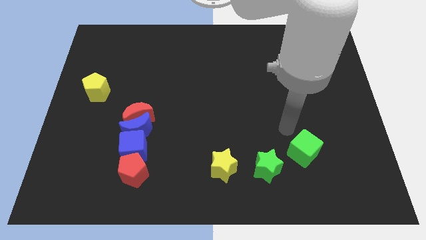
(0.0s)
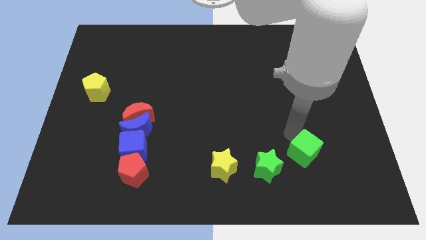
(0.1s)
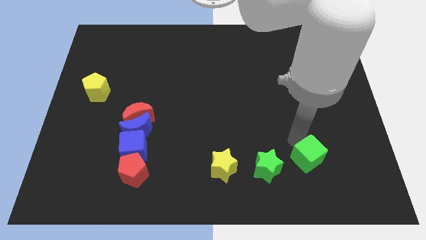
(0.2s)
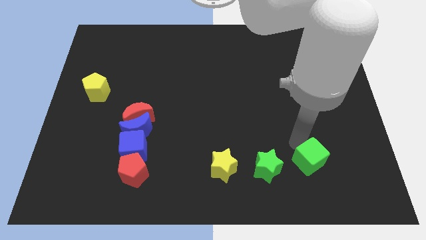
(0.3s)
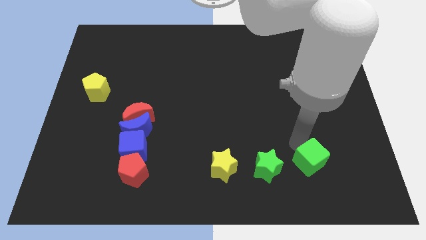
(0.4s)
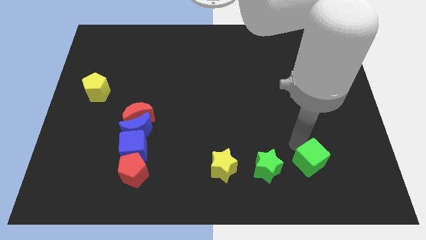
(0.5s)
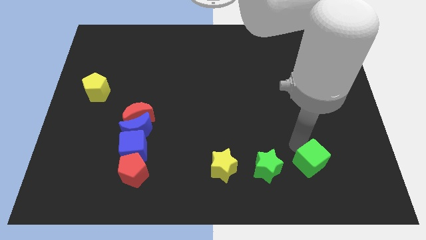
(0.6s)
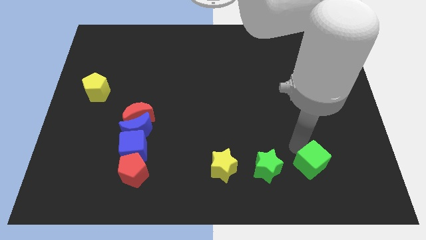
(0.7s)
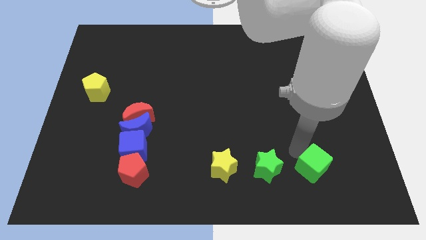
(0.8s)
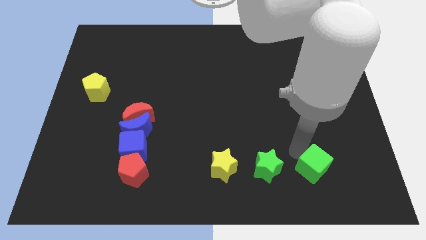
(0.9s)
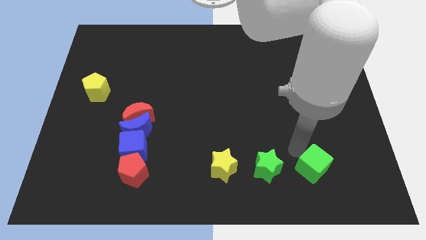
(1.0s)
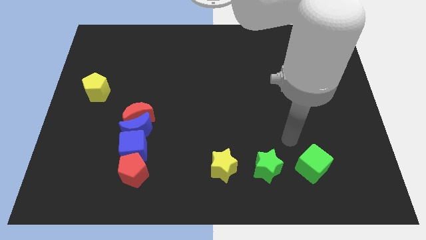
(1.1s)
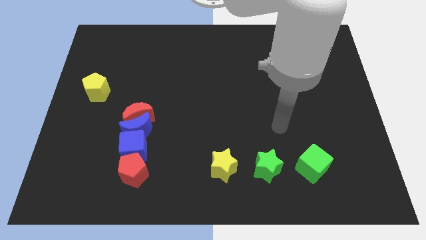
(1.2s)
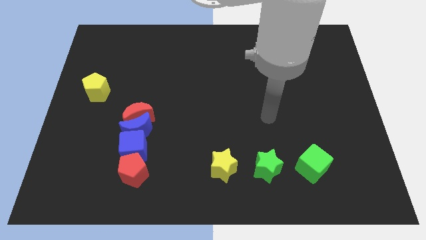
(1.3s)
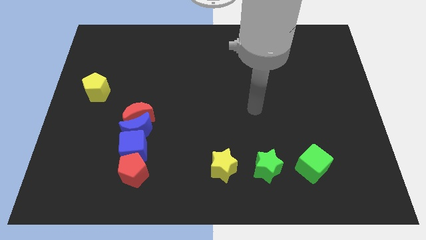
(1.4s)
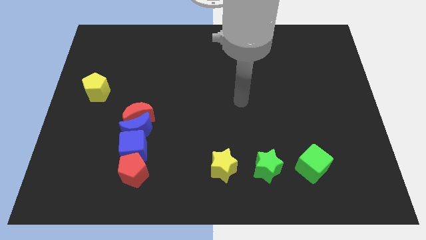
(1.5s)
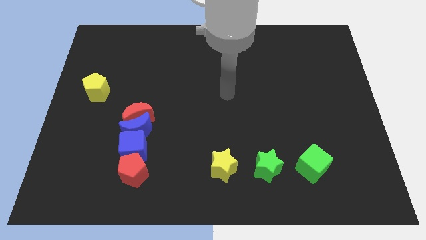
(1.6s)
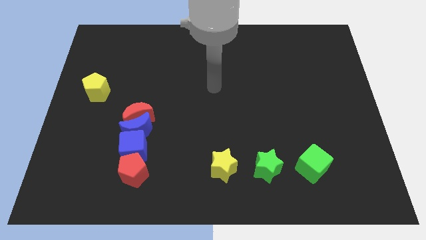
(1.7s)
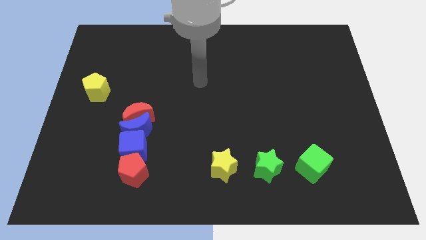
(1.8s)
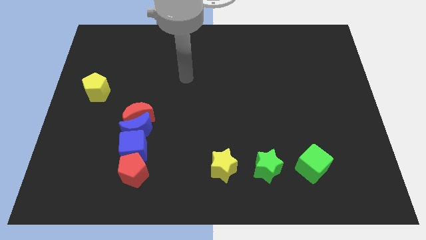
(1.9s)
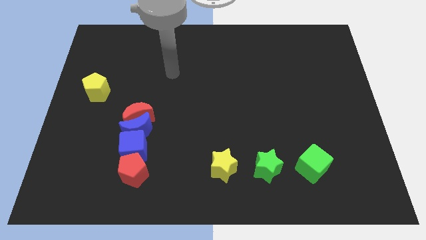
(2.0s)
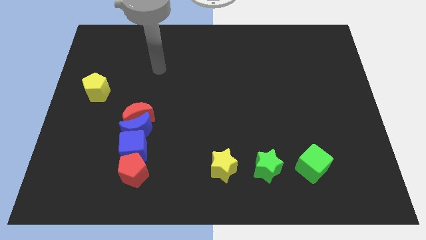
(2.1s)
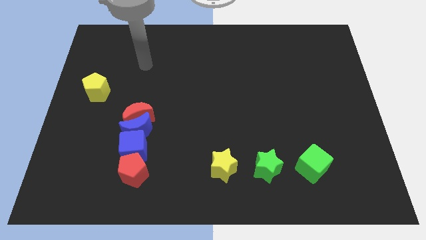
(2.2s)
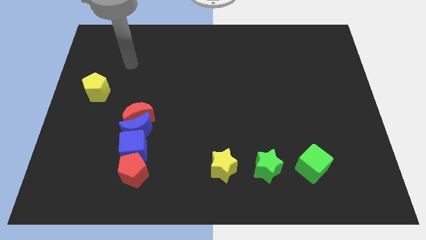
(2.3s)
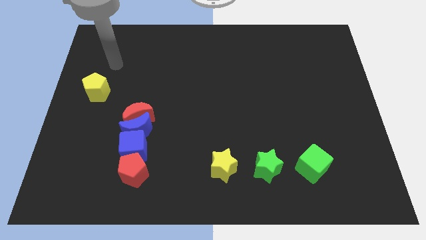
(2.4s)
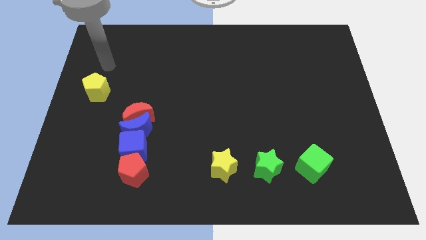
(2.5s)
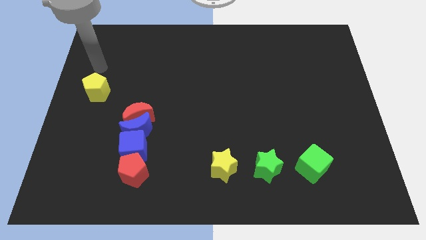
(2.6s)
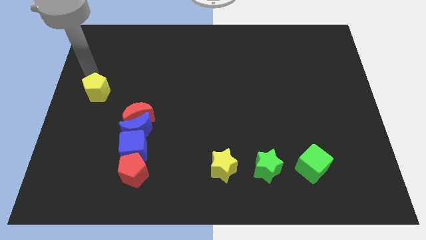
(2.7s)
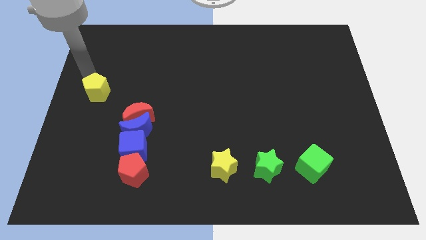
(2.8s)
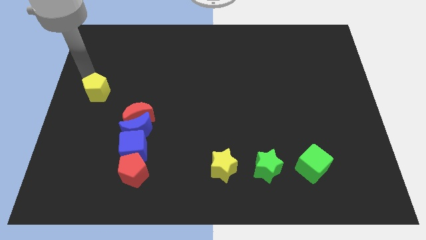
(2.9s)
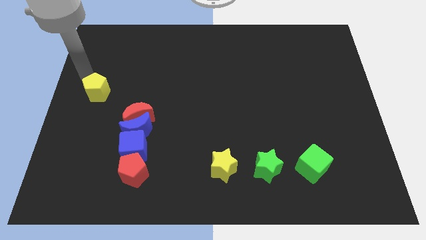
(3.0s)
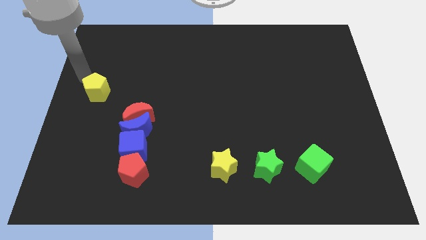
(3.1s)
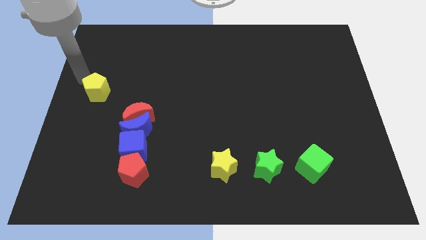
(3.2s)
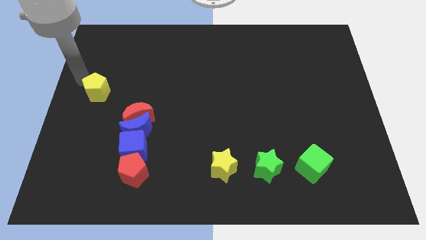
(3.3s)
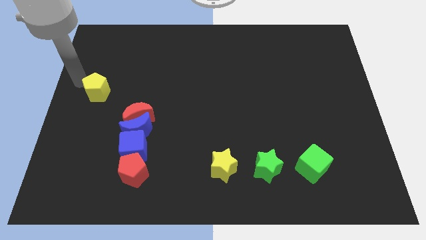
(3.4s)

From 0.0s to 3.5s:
move the green cube to the right side of the green star

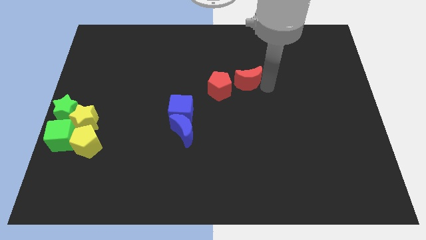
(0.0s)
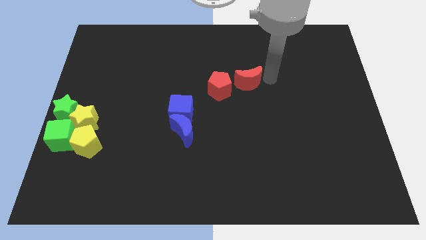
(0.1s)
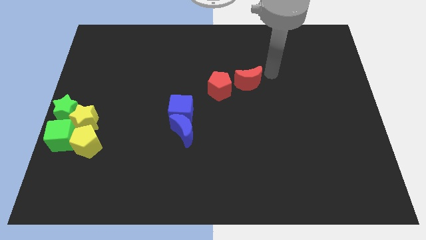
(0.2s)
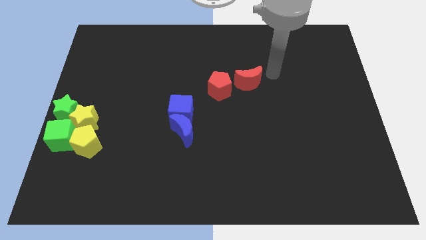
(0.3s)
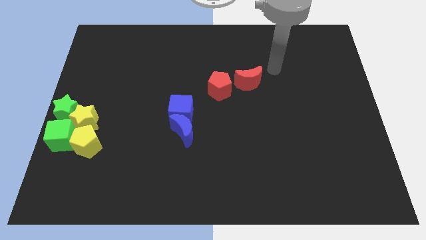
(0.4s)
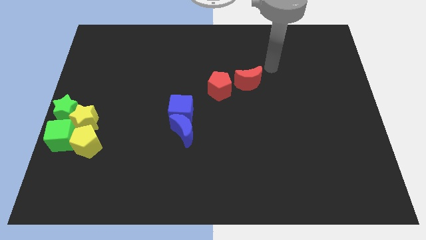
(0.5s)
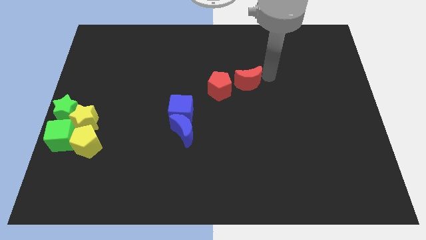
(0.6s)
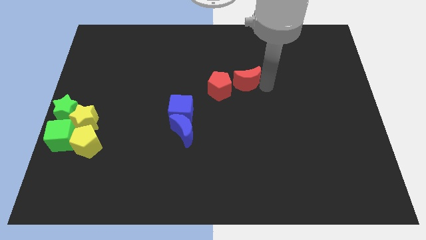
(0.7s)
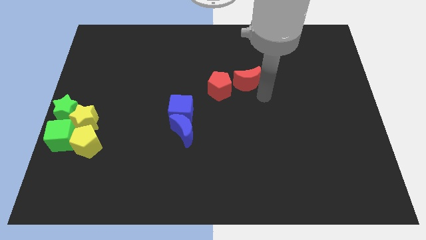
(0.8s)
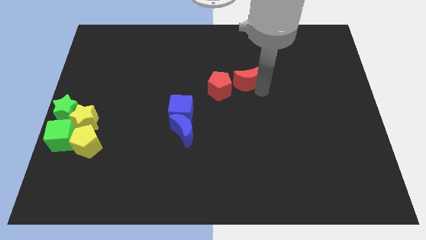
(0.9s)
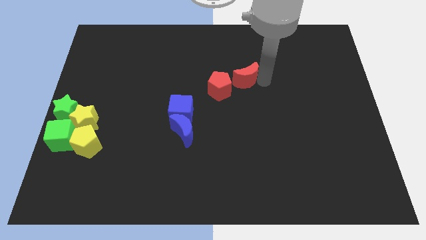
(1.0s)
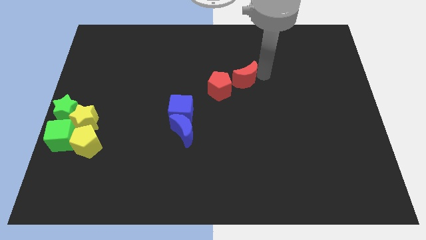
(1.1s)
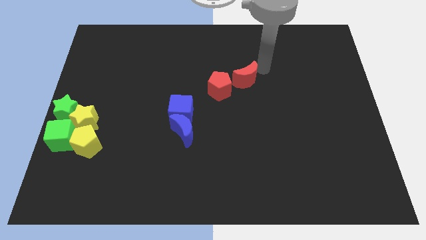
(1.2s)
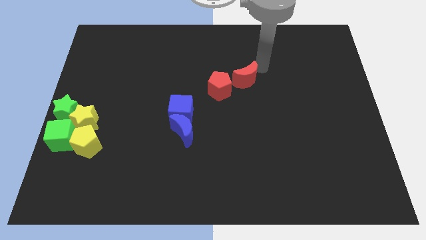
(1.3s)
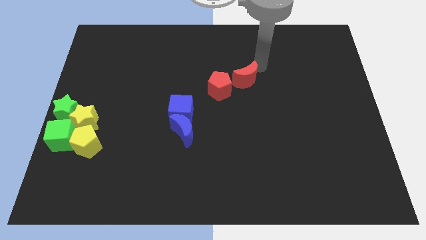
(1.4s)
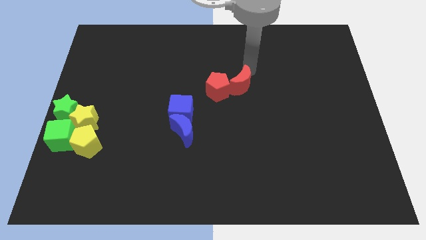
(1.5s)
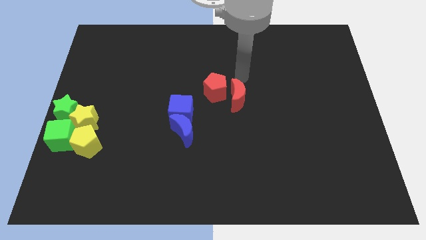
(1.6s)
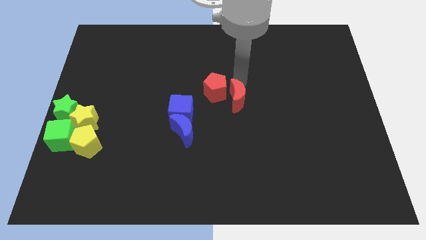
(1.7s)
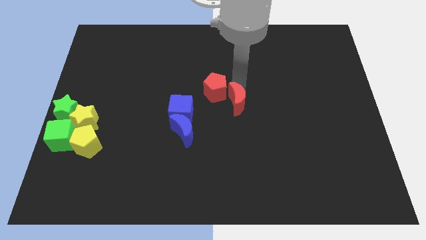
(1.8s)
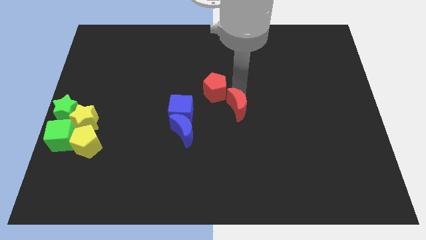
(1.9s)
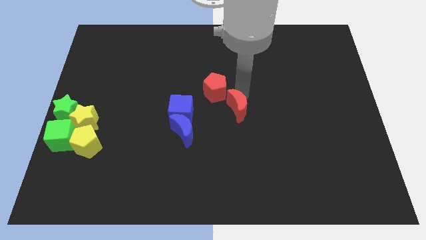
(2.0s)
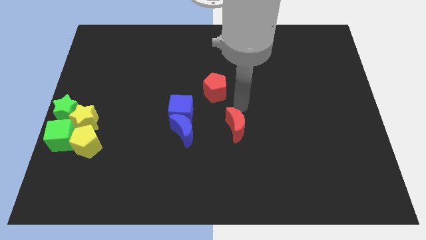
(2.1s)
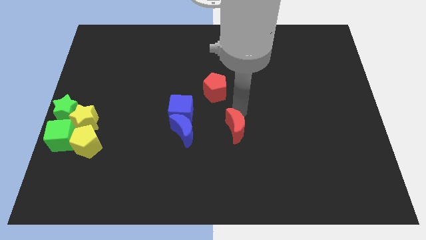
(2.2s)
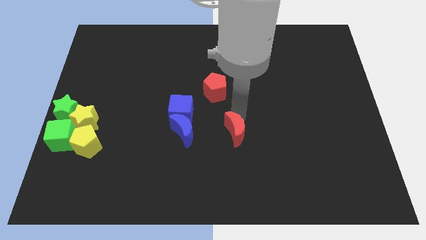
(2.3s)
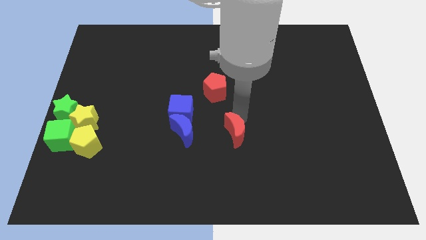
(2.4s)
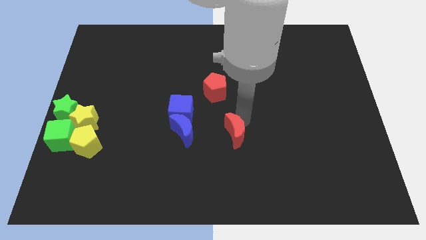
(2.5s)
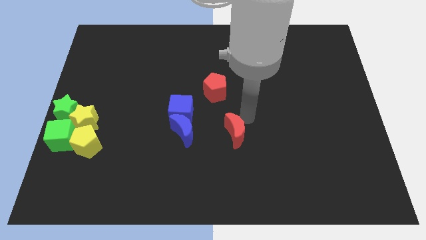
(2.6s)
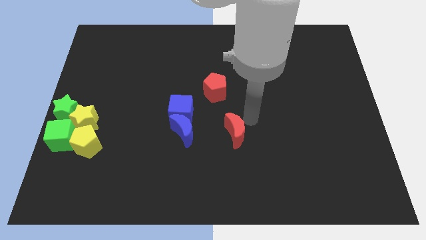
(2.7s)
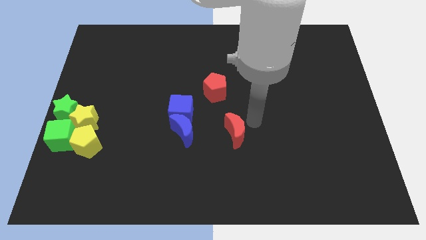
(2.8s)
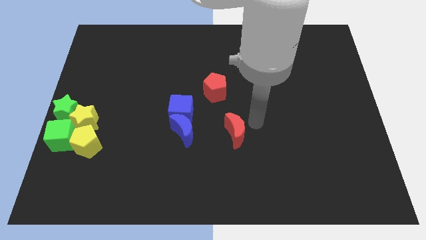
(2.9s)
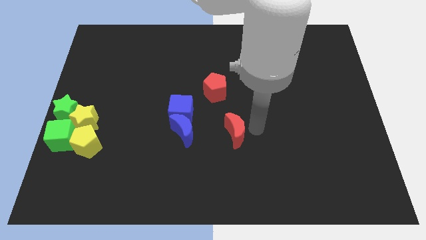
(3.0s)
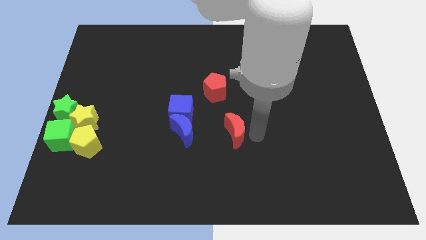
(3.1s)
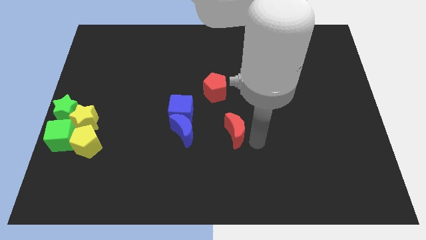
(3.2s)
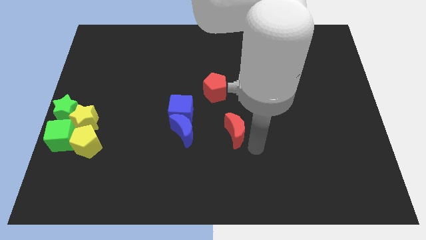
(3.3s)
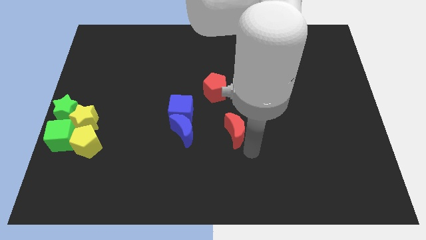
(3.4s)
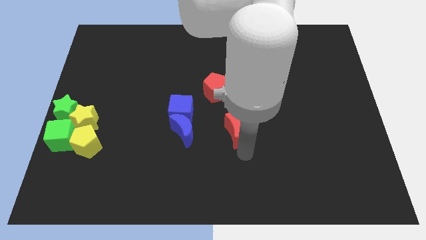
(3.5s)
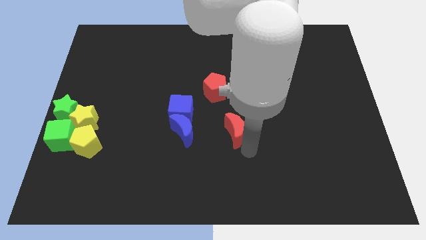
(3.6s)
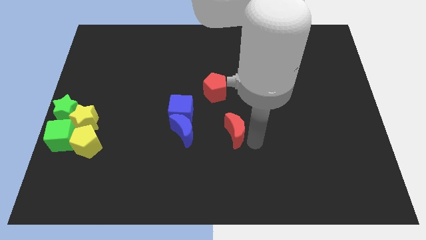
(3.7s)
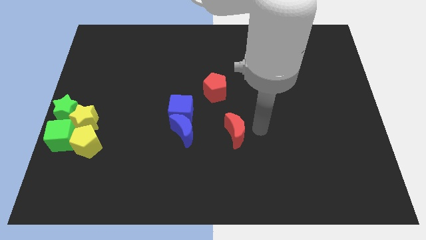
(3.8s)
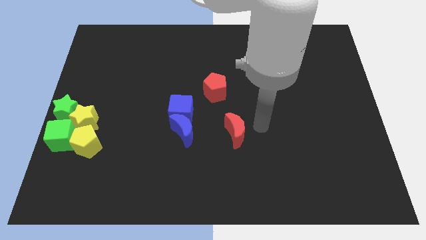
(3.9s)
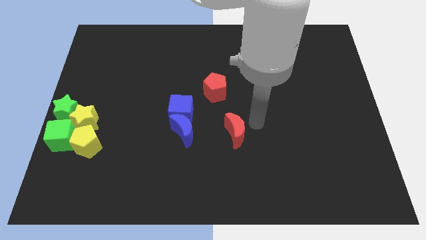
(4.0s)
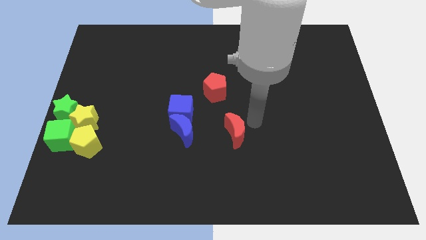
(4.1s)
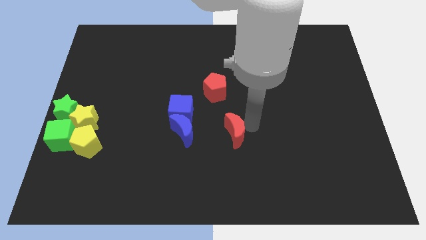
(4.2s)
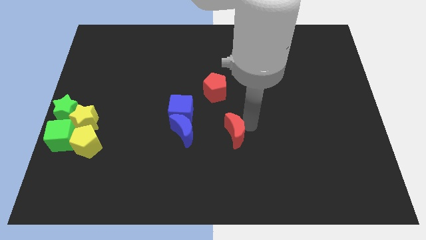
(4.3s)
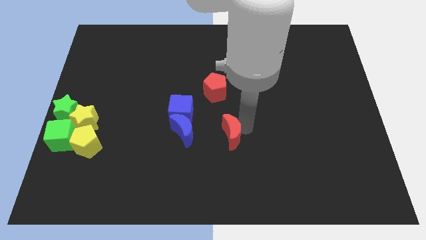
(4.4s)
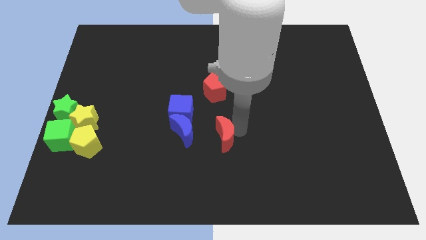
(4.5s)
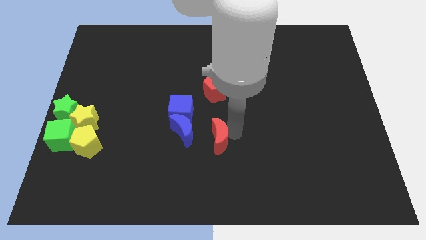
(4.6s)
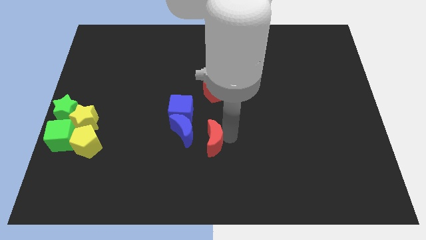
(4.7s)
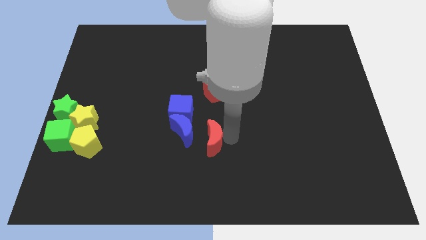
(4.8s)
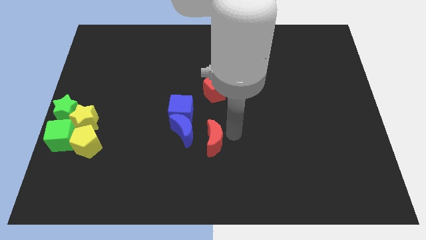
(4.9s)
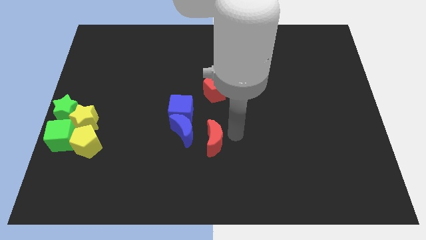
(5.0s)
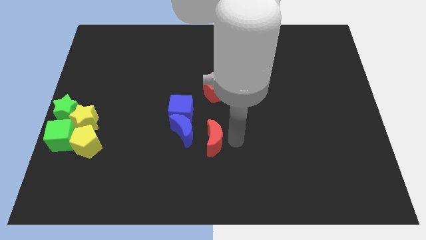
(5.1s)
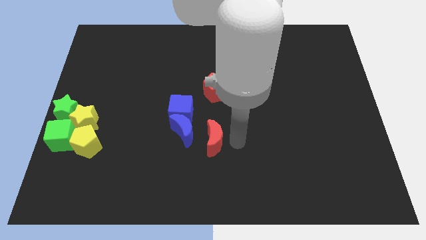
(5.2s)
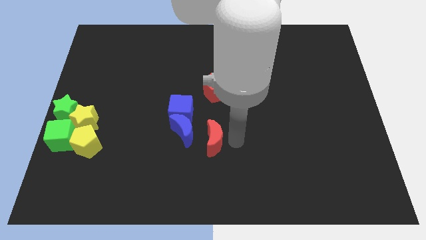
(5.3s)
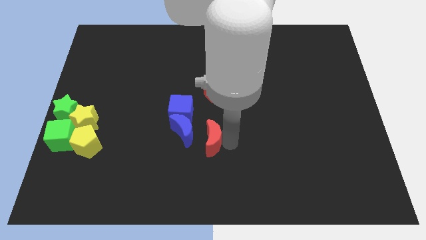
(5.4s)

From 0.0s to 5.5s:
slide the red moon parallel to the blue moon

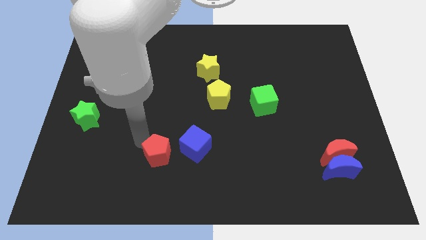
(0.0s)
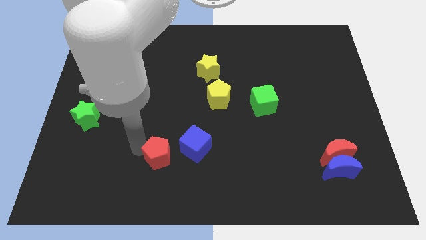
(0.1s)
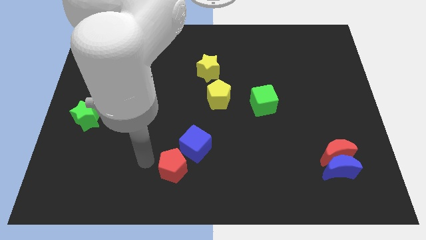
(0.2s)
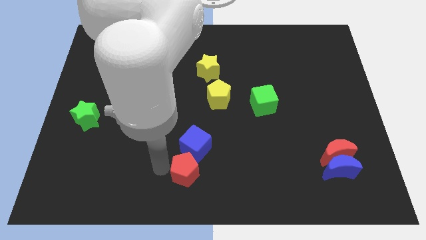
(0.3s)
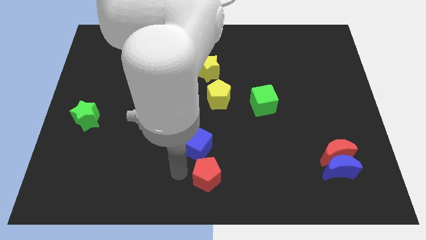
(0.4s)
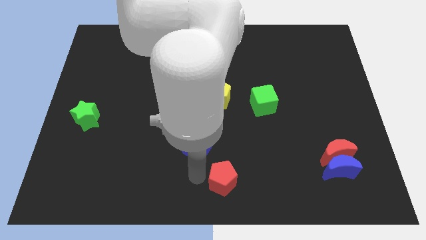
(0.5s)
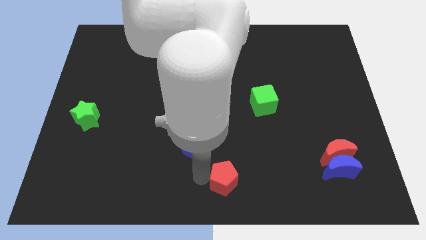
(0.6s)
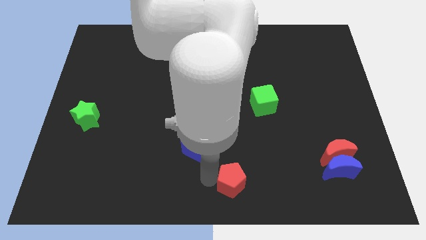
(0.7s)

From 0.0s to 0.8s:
place red pentagon below the blue cube
